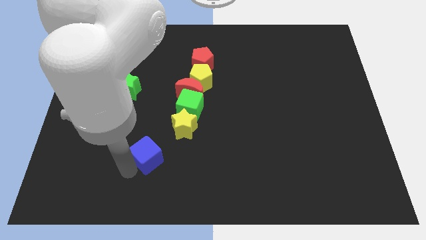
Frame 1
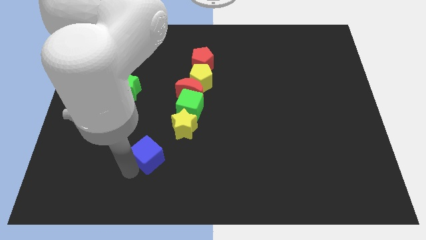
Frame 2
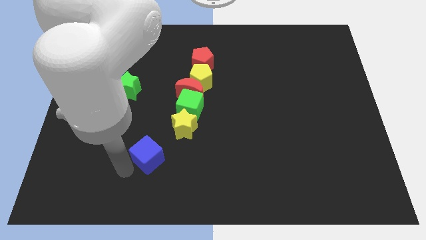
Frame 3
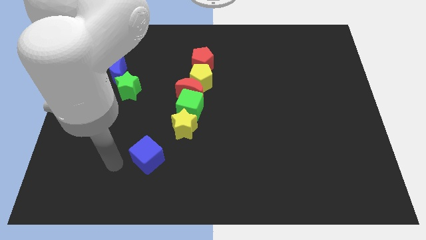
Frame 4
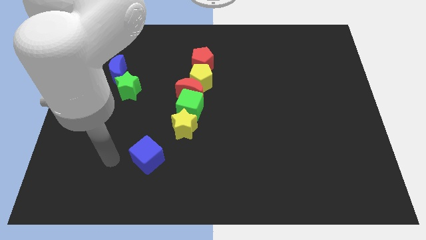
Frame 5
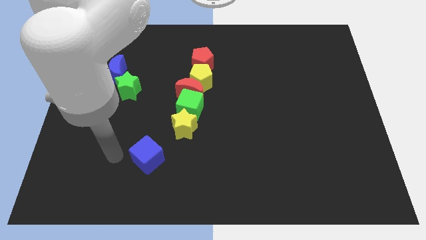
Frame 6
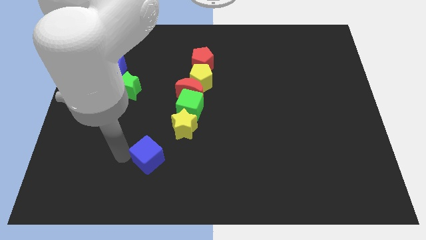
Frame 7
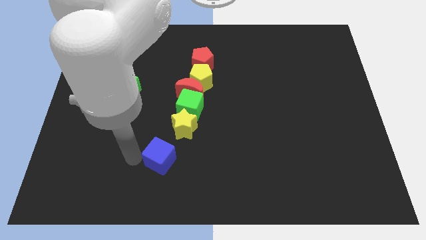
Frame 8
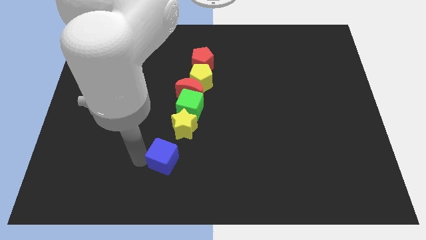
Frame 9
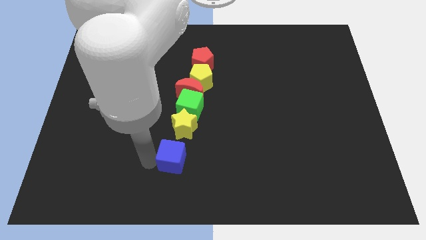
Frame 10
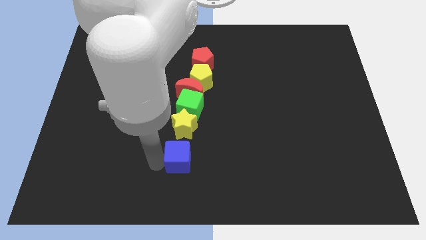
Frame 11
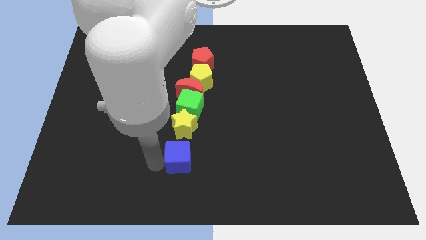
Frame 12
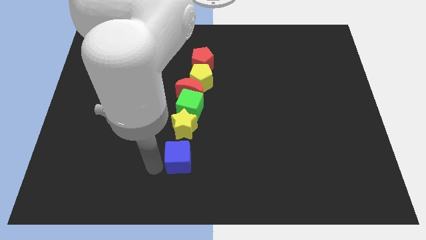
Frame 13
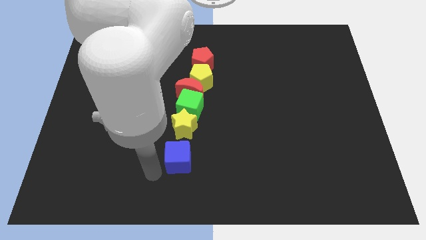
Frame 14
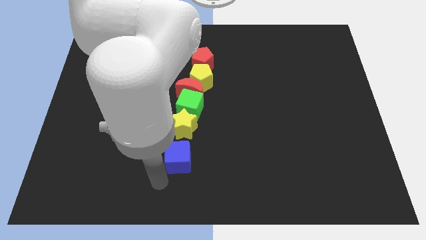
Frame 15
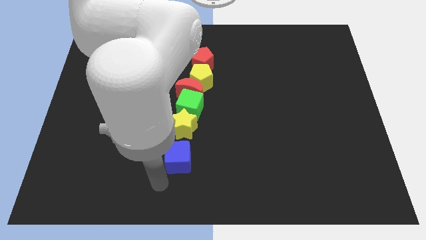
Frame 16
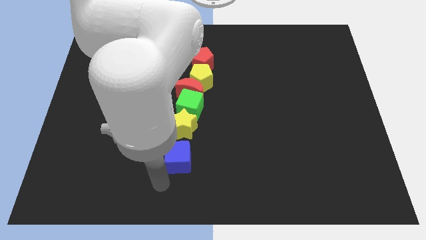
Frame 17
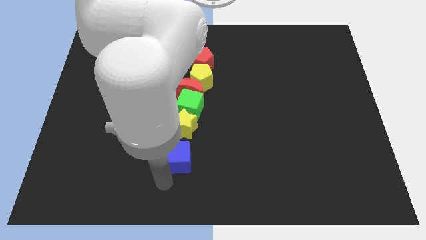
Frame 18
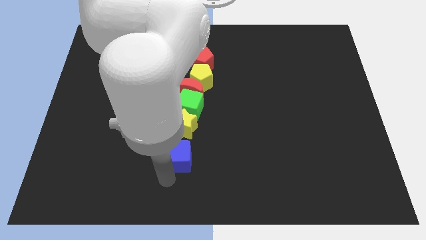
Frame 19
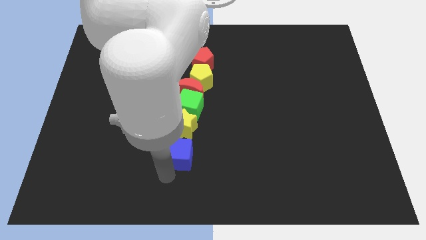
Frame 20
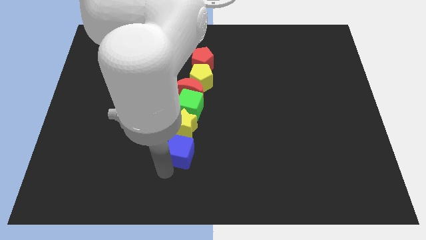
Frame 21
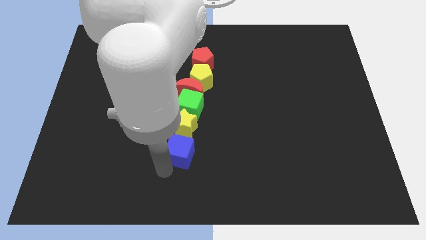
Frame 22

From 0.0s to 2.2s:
place the blue cube close to the yellow star

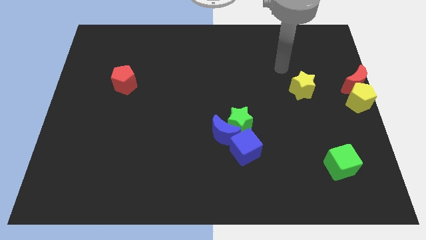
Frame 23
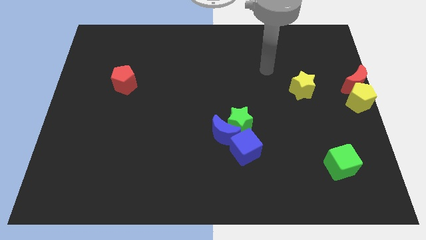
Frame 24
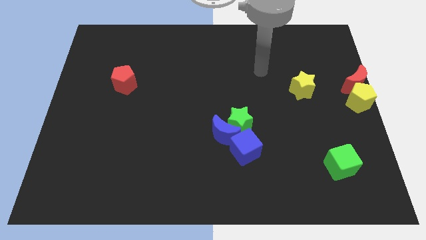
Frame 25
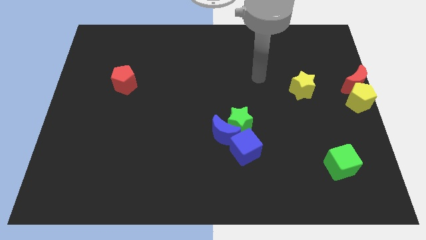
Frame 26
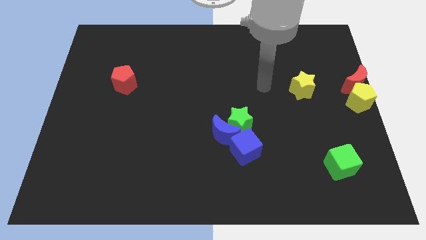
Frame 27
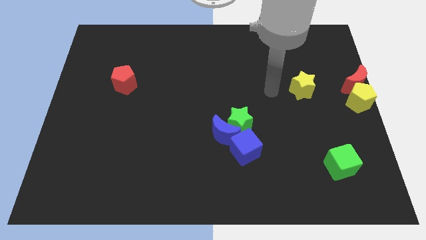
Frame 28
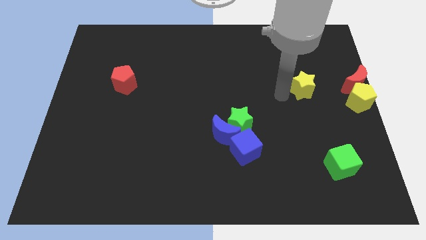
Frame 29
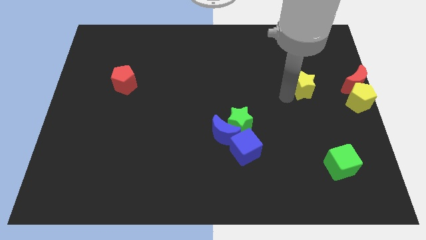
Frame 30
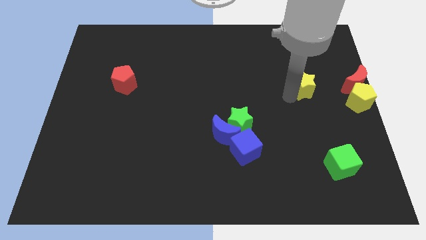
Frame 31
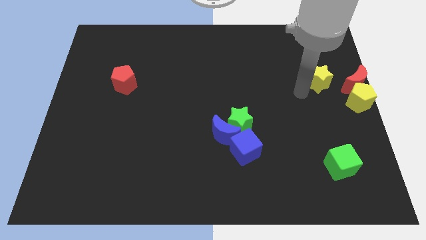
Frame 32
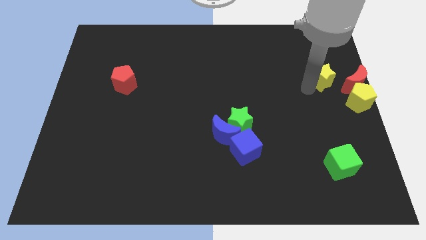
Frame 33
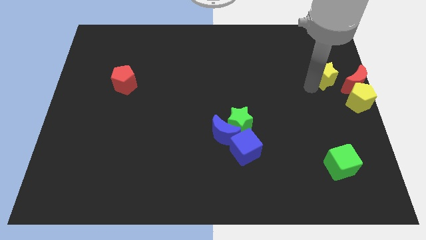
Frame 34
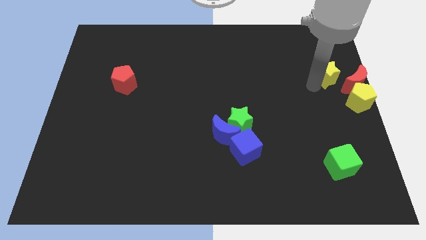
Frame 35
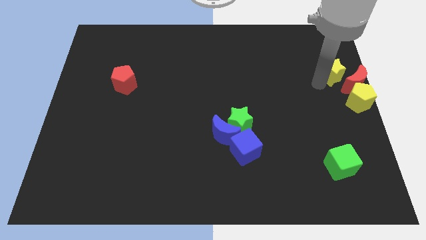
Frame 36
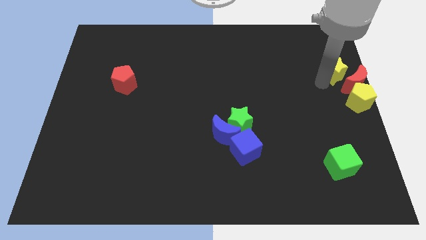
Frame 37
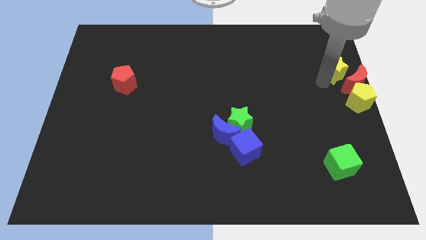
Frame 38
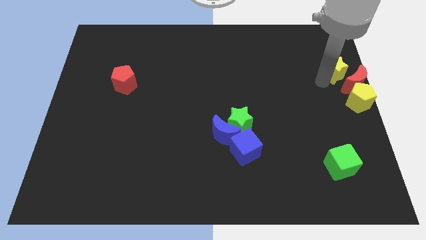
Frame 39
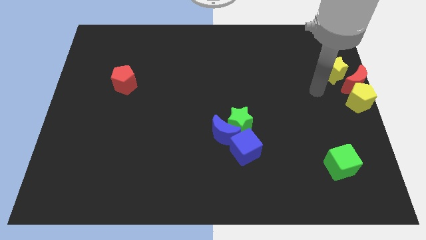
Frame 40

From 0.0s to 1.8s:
push the yellow star to the top left side of the red moon

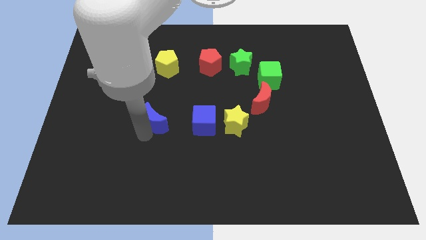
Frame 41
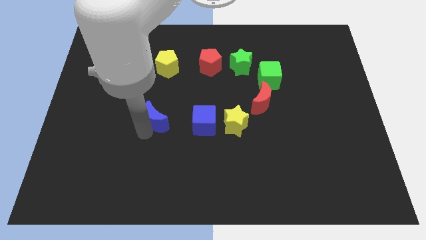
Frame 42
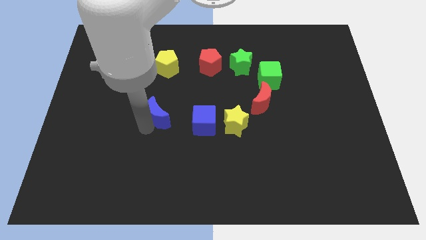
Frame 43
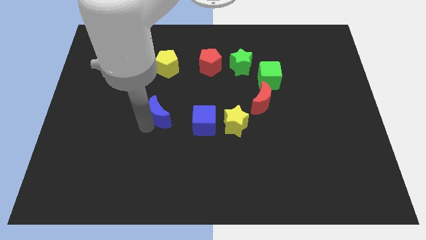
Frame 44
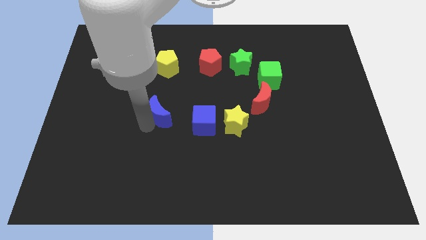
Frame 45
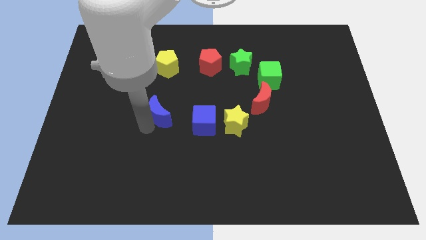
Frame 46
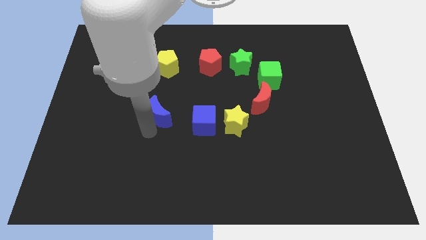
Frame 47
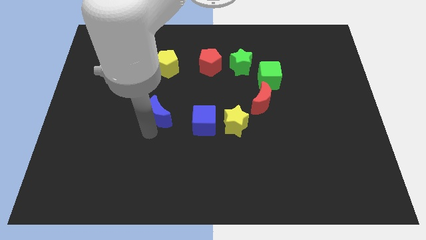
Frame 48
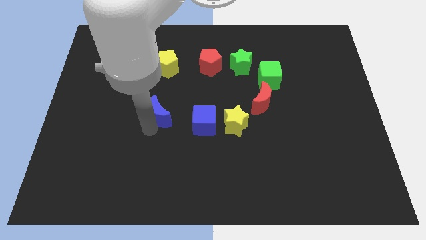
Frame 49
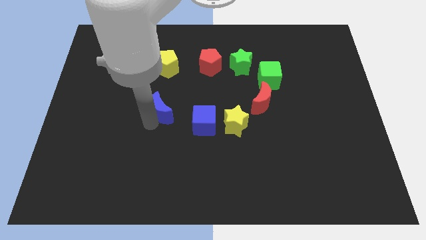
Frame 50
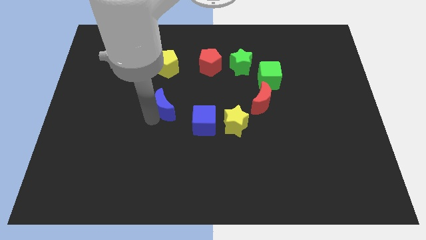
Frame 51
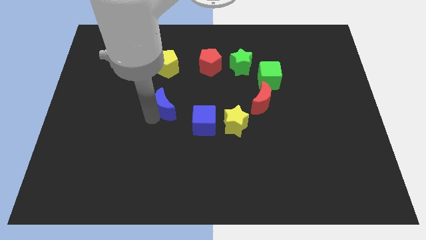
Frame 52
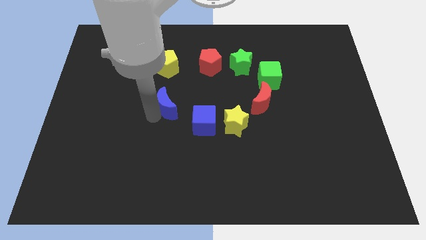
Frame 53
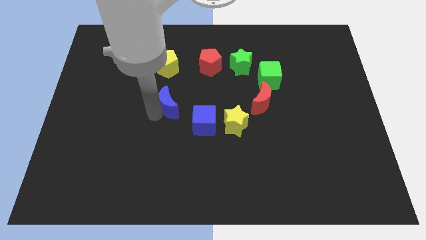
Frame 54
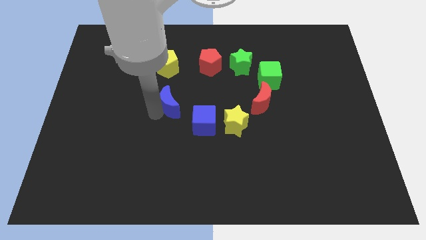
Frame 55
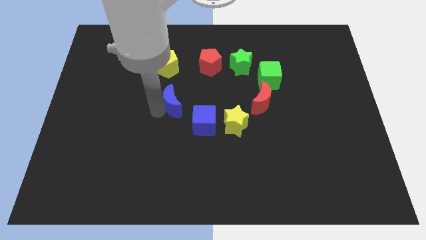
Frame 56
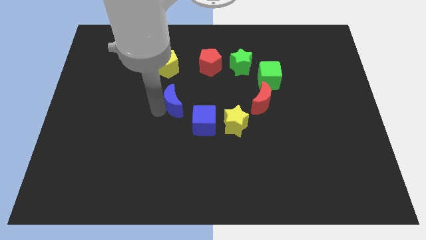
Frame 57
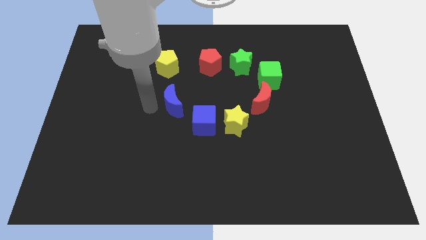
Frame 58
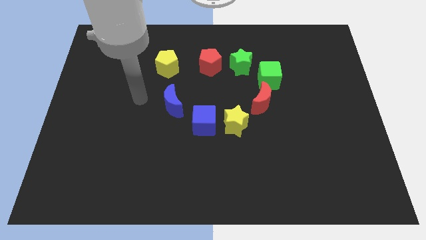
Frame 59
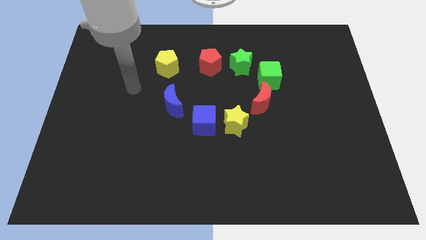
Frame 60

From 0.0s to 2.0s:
place the blue moon vertically below the yellow pentagon

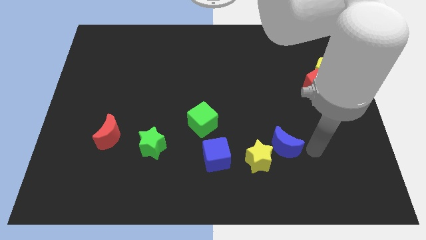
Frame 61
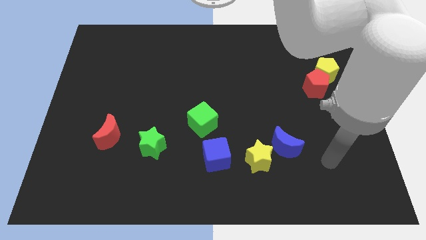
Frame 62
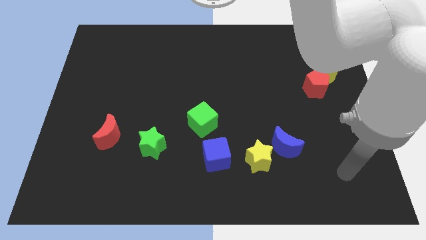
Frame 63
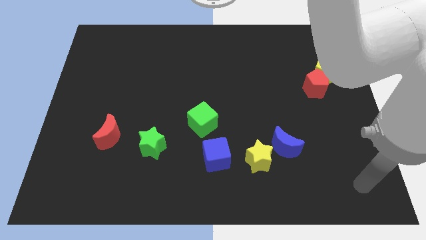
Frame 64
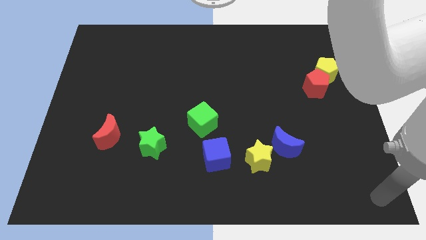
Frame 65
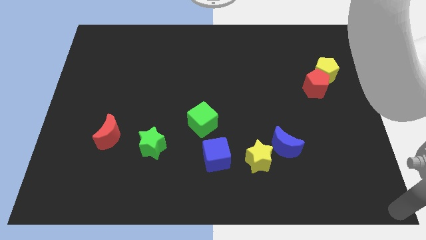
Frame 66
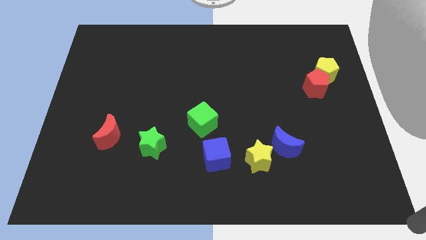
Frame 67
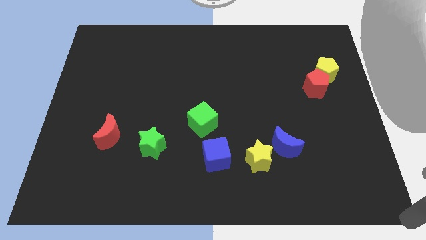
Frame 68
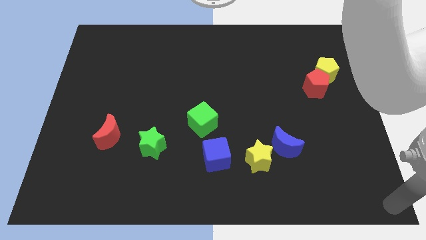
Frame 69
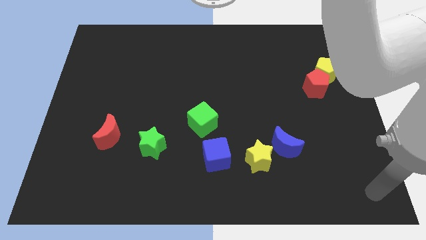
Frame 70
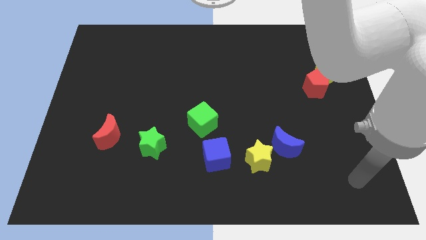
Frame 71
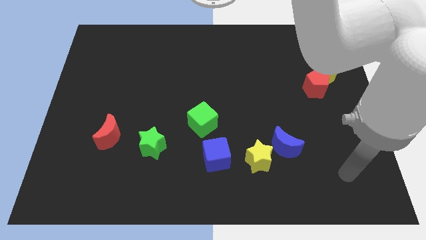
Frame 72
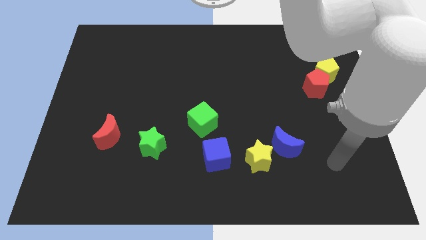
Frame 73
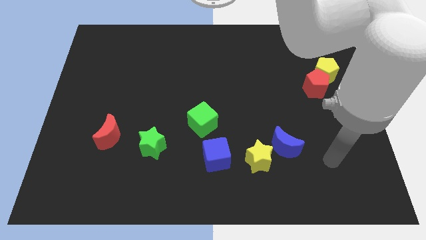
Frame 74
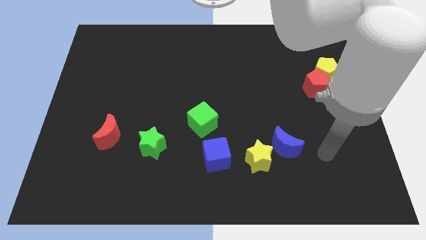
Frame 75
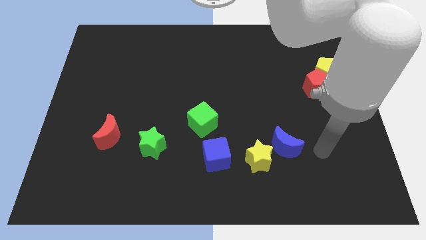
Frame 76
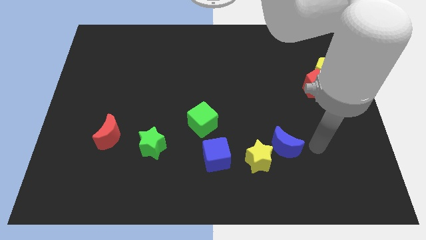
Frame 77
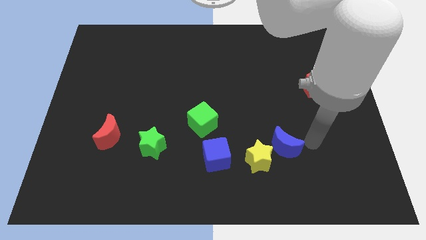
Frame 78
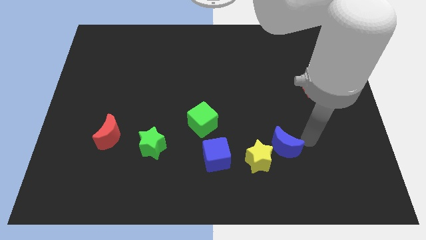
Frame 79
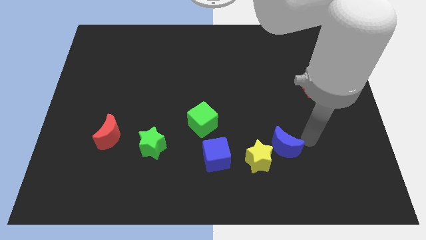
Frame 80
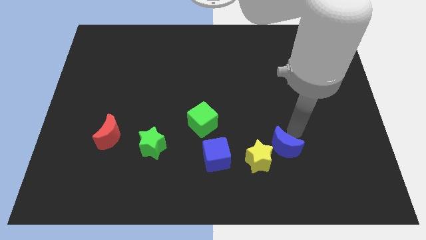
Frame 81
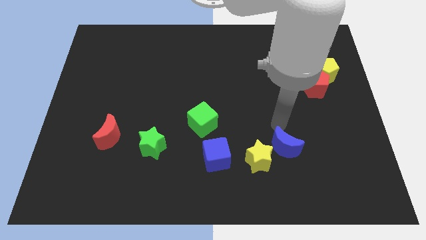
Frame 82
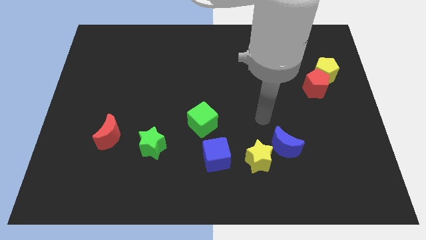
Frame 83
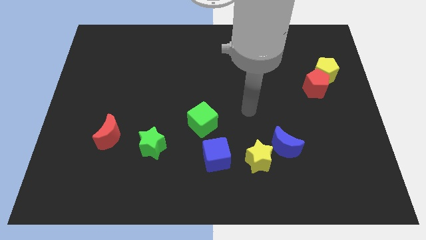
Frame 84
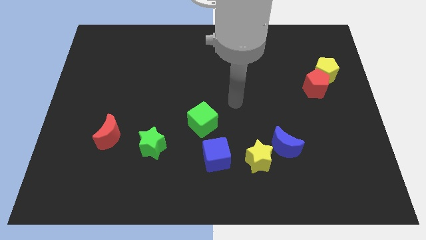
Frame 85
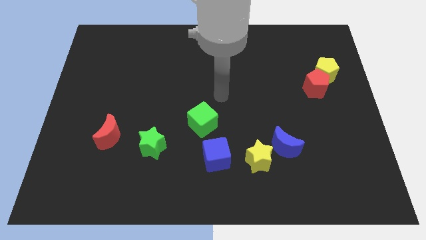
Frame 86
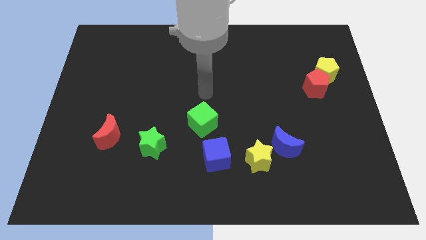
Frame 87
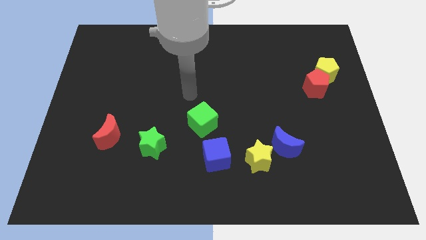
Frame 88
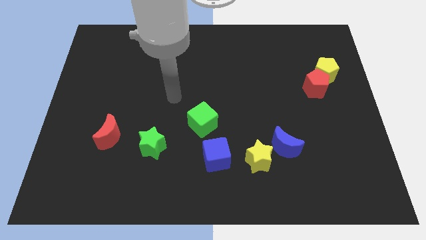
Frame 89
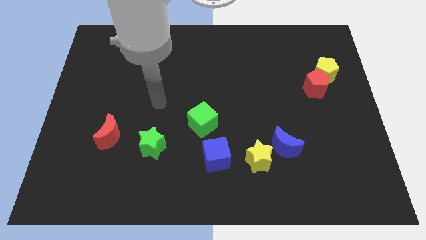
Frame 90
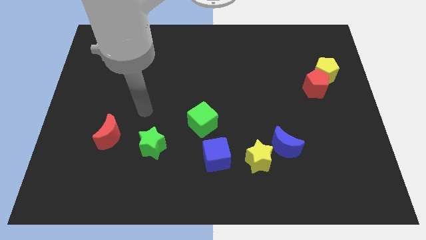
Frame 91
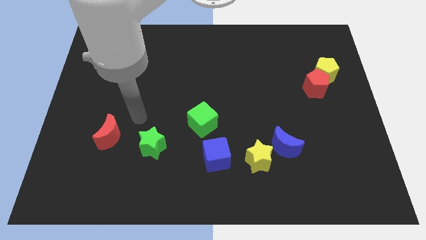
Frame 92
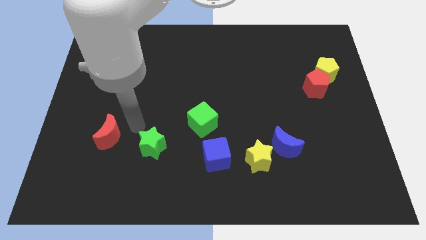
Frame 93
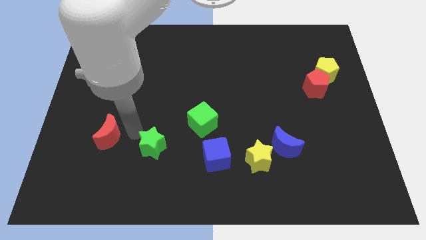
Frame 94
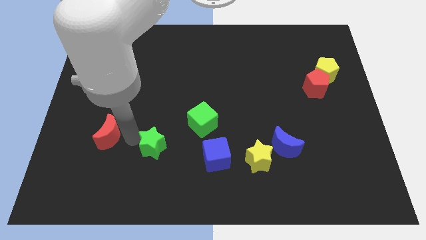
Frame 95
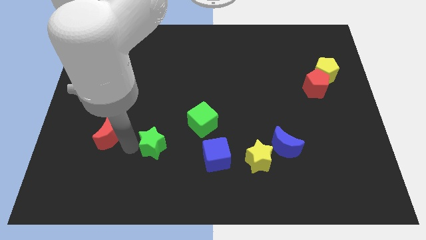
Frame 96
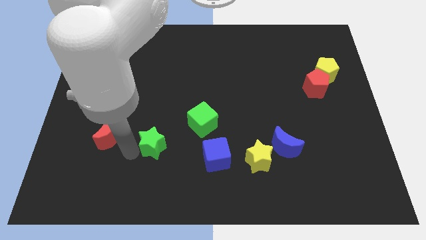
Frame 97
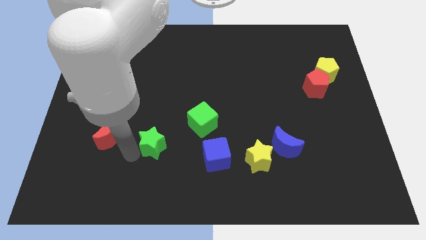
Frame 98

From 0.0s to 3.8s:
move your arm towards the green star
